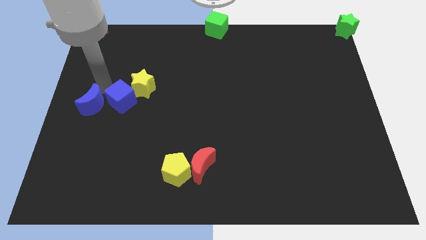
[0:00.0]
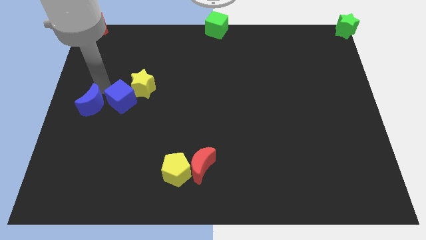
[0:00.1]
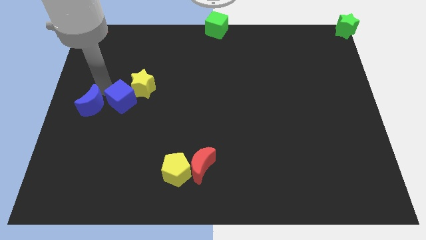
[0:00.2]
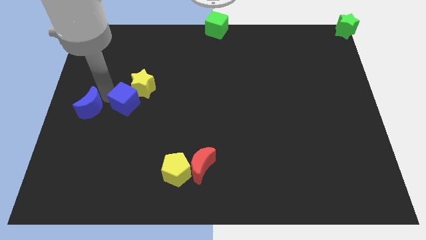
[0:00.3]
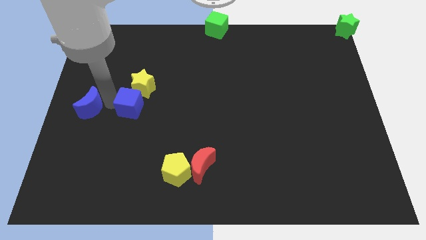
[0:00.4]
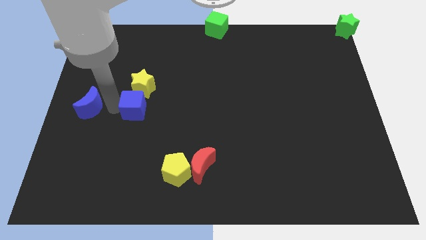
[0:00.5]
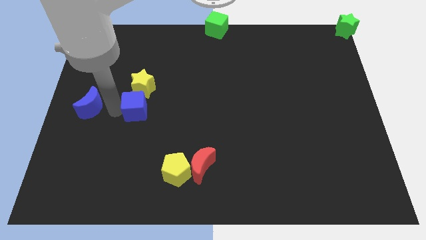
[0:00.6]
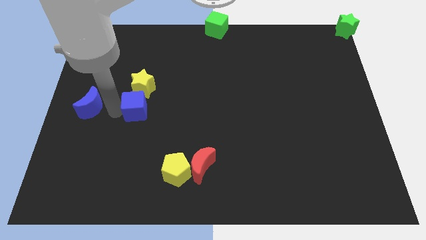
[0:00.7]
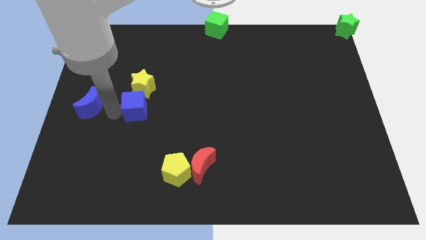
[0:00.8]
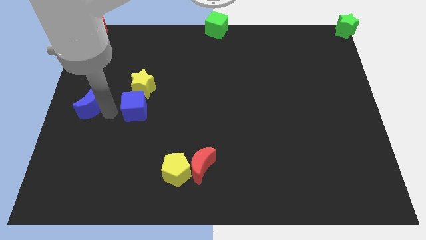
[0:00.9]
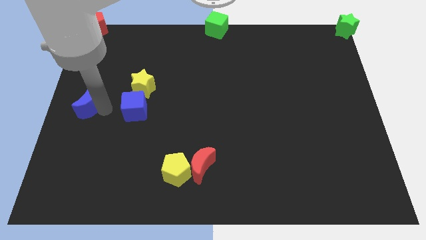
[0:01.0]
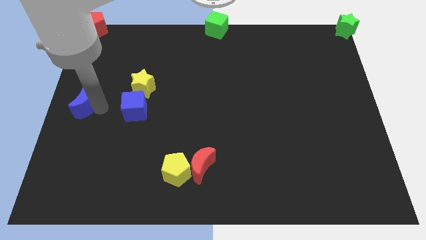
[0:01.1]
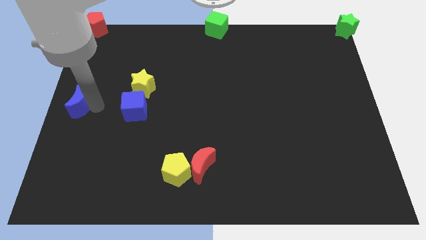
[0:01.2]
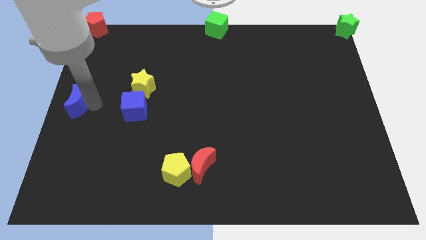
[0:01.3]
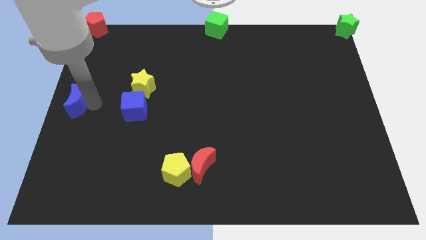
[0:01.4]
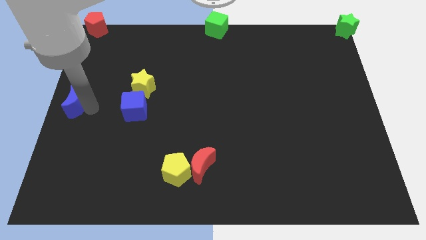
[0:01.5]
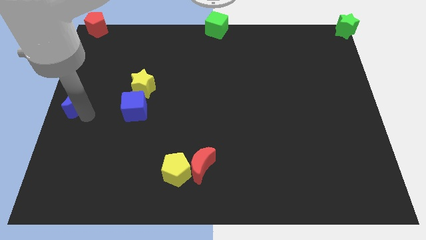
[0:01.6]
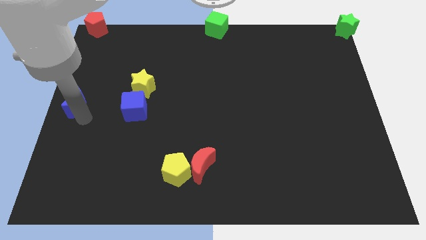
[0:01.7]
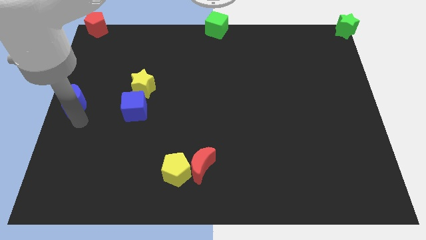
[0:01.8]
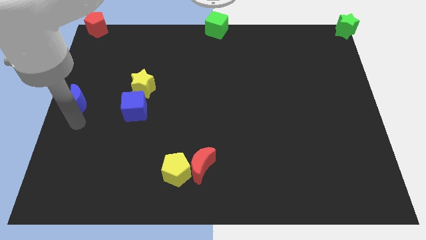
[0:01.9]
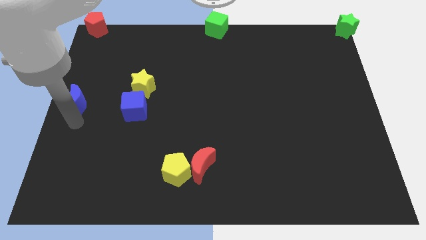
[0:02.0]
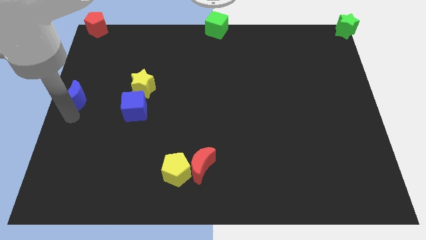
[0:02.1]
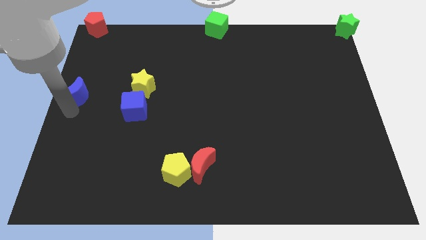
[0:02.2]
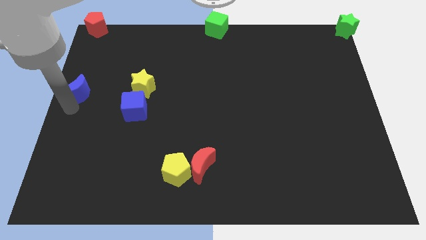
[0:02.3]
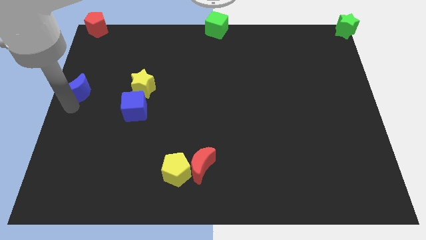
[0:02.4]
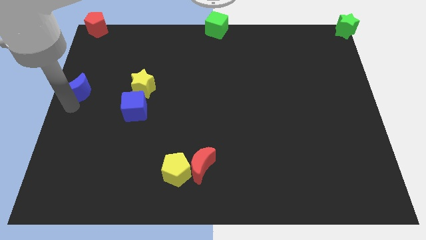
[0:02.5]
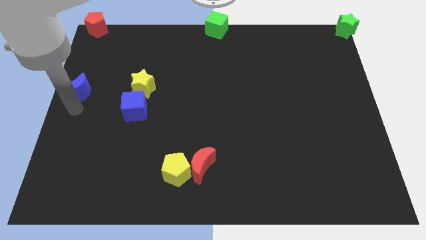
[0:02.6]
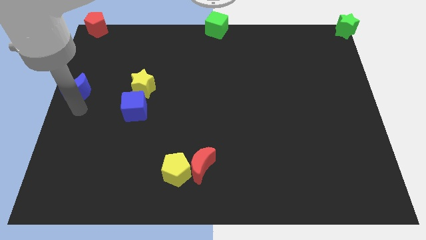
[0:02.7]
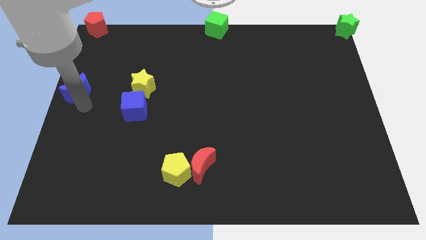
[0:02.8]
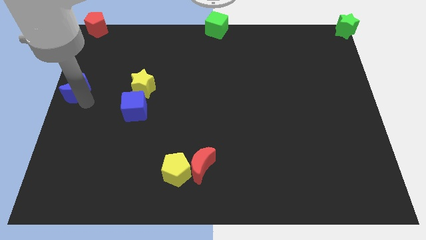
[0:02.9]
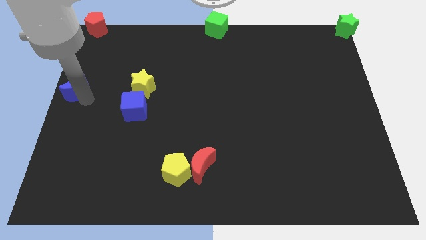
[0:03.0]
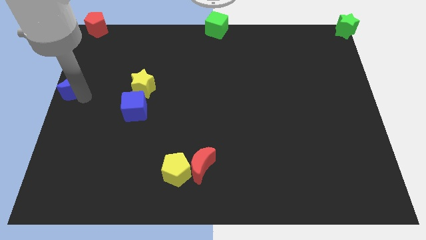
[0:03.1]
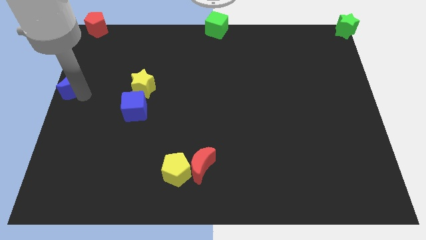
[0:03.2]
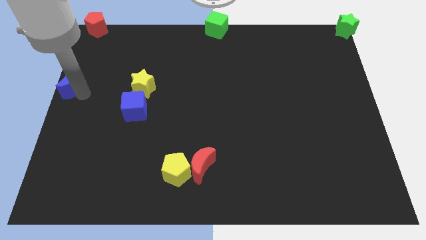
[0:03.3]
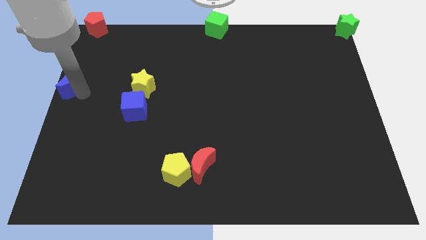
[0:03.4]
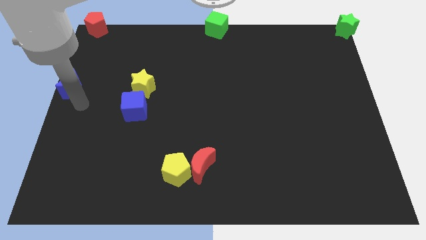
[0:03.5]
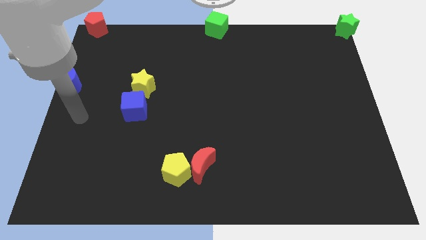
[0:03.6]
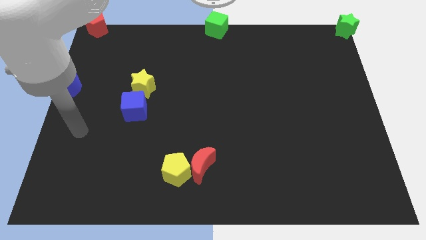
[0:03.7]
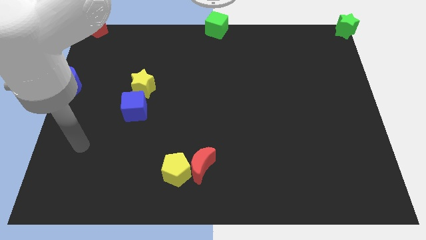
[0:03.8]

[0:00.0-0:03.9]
push the blue moon to the middle left of the board

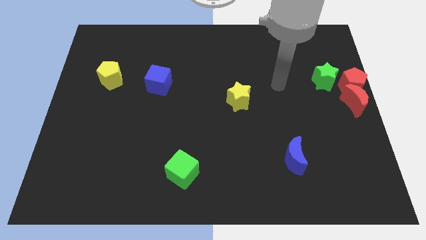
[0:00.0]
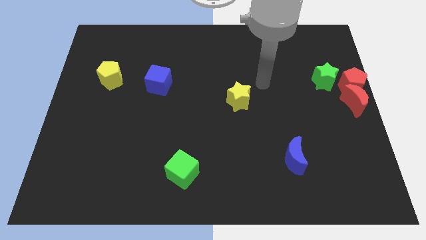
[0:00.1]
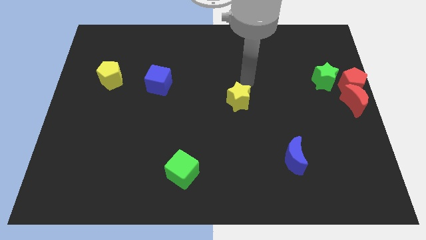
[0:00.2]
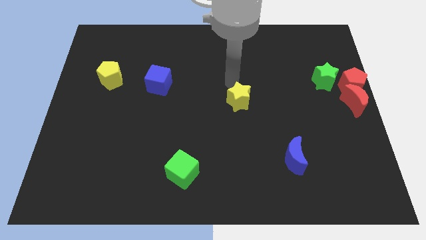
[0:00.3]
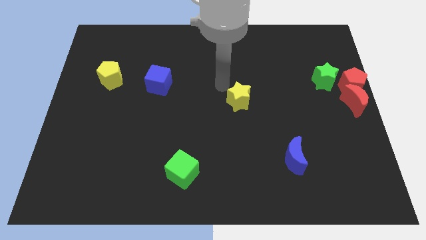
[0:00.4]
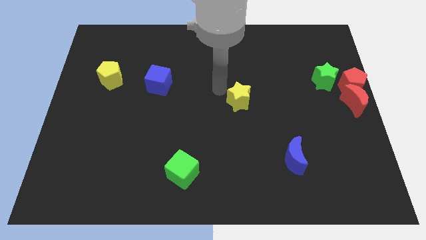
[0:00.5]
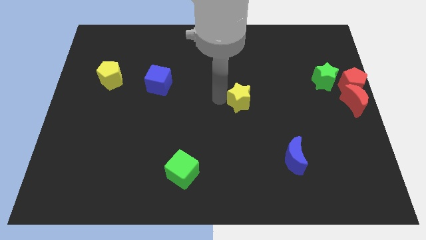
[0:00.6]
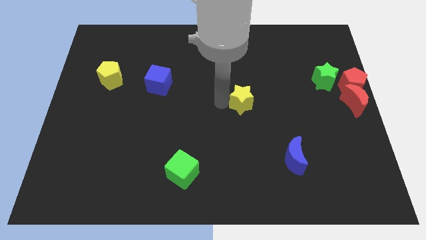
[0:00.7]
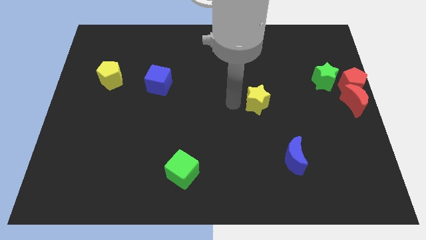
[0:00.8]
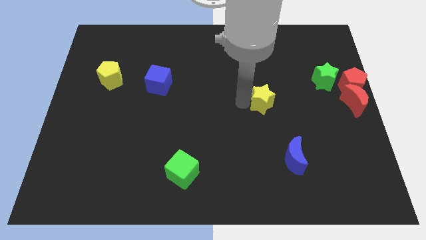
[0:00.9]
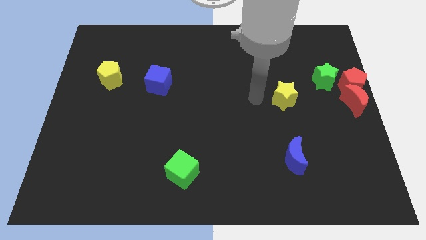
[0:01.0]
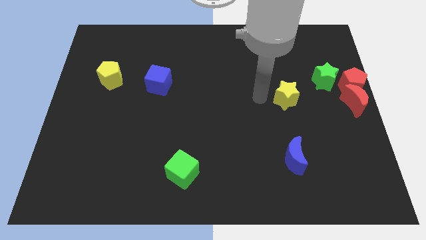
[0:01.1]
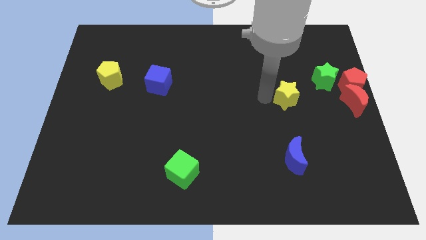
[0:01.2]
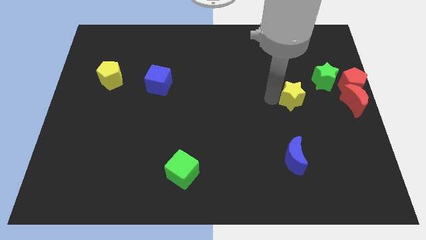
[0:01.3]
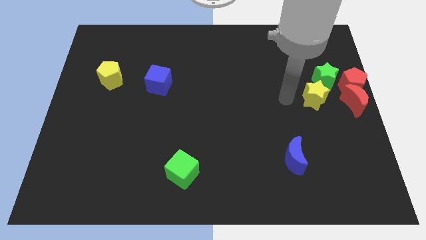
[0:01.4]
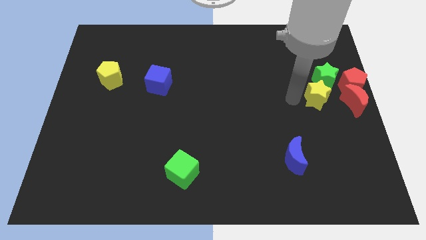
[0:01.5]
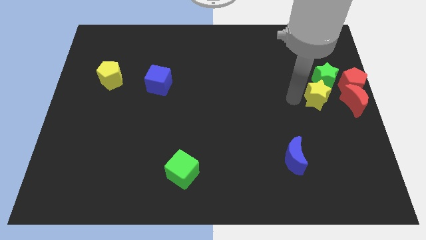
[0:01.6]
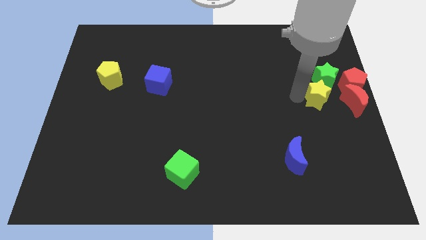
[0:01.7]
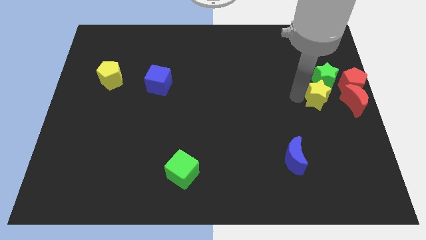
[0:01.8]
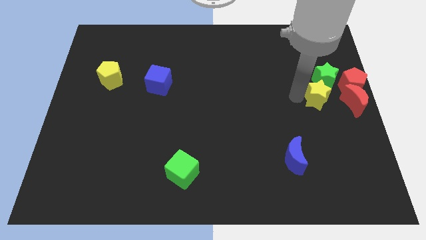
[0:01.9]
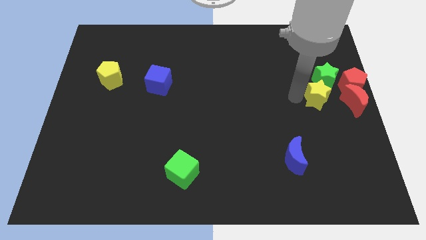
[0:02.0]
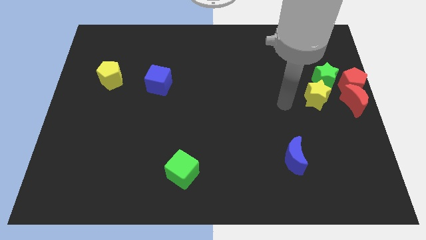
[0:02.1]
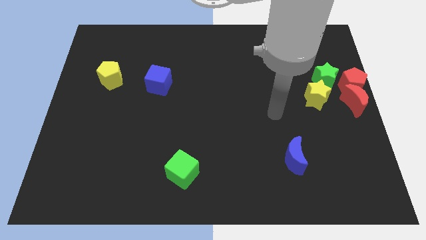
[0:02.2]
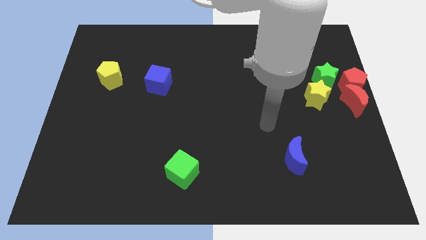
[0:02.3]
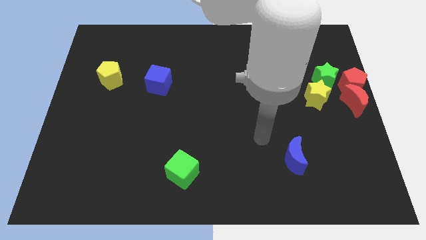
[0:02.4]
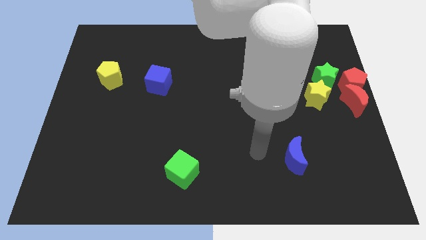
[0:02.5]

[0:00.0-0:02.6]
move the yellow star to the left of the red crescent

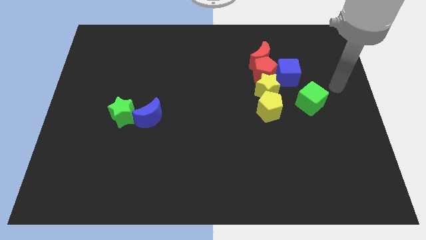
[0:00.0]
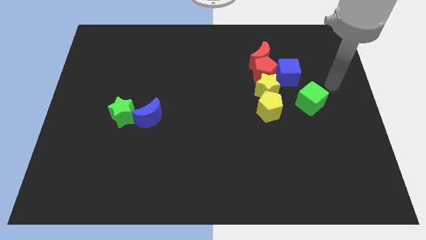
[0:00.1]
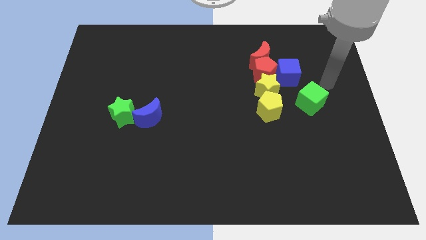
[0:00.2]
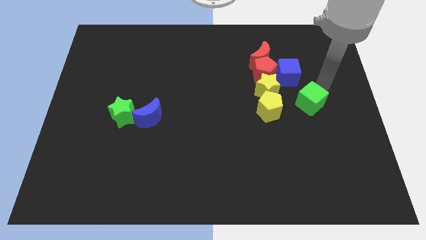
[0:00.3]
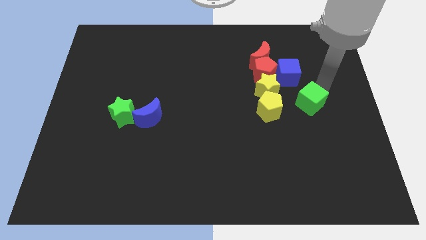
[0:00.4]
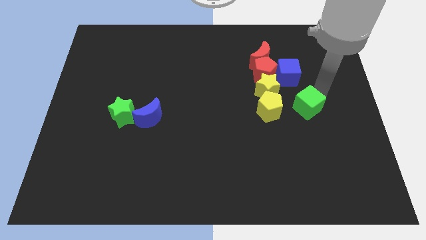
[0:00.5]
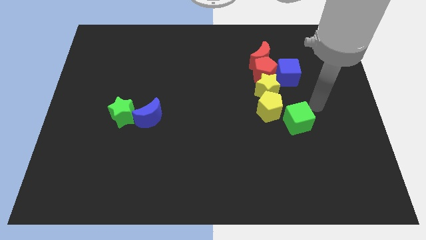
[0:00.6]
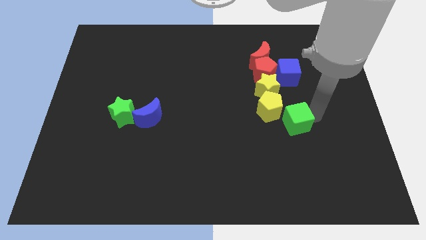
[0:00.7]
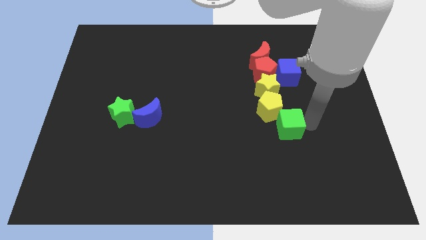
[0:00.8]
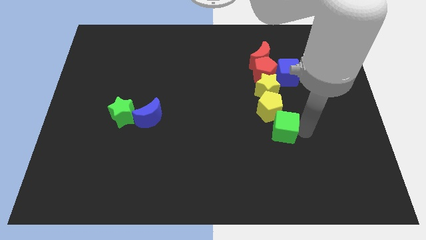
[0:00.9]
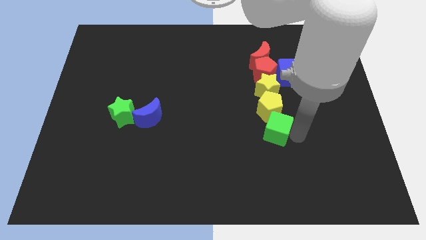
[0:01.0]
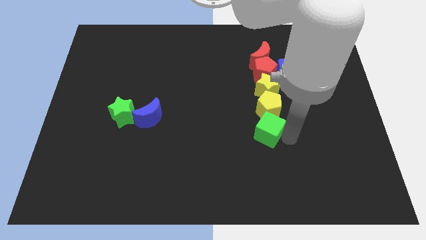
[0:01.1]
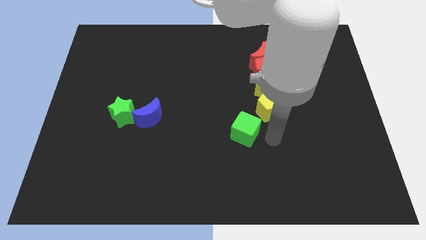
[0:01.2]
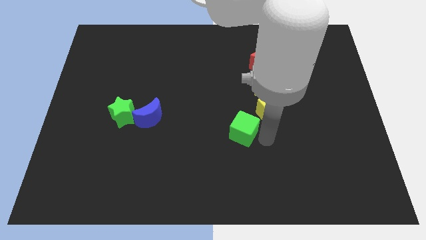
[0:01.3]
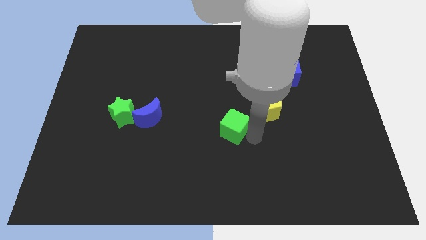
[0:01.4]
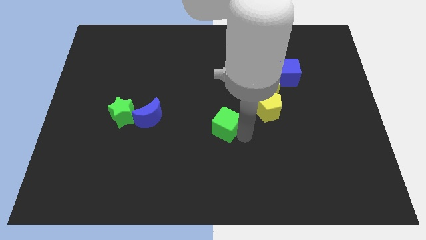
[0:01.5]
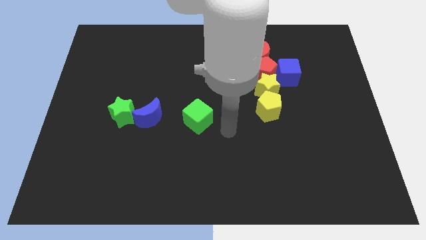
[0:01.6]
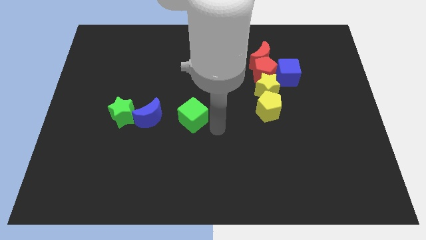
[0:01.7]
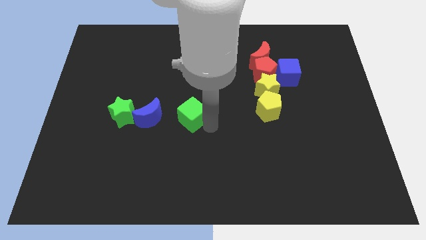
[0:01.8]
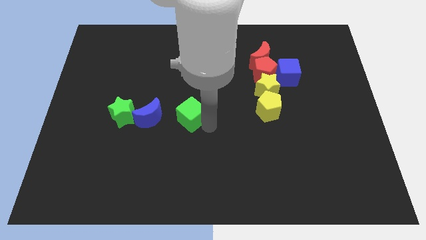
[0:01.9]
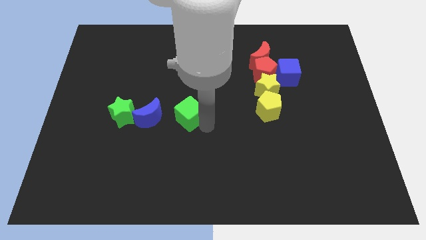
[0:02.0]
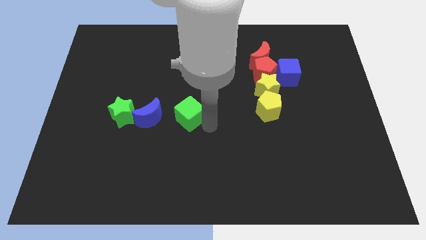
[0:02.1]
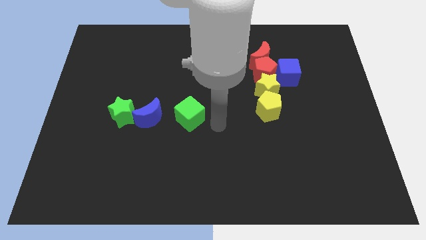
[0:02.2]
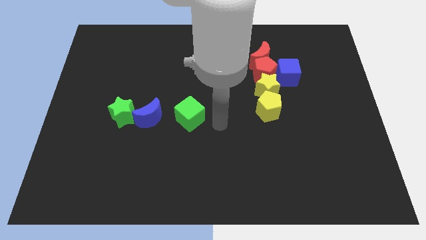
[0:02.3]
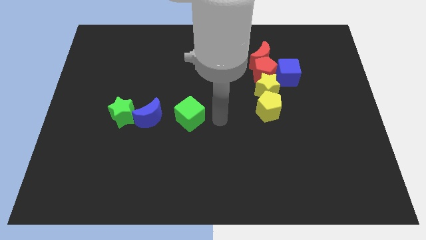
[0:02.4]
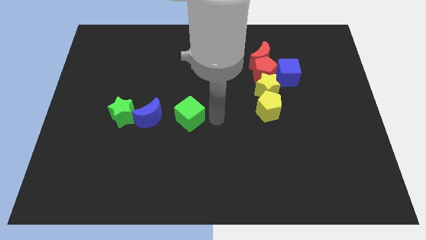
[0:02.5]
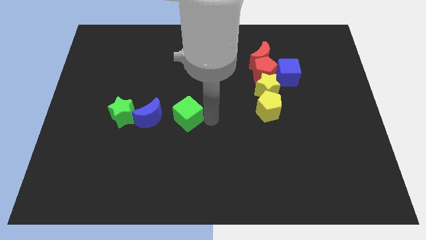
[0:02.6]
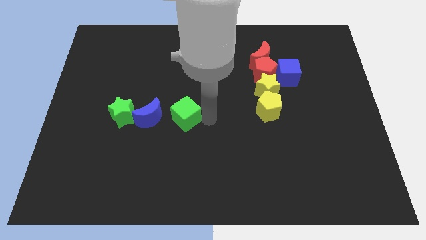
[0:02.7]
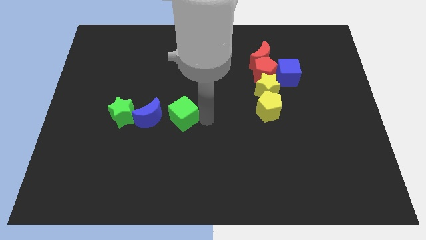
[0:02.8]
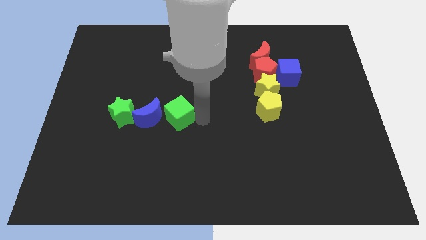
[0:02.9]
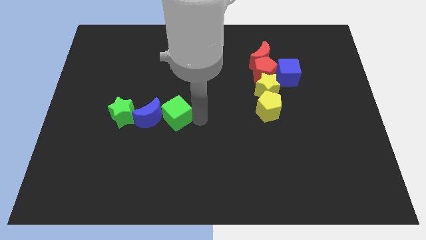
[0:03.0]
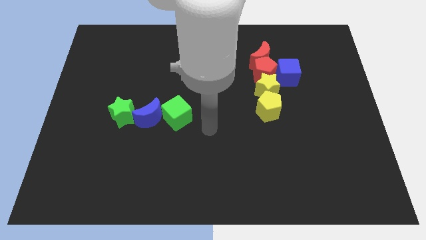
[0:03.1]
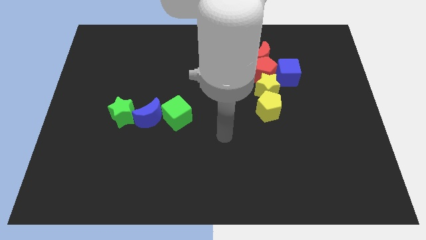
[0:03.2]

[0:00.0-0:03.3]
push the green cube to the right of blue moon
